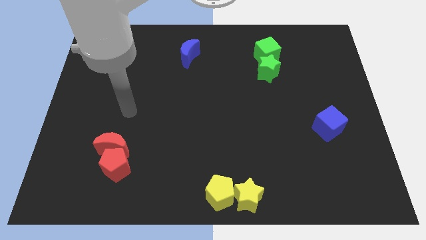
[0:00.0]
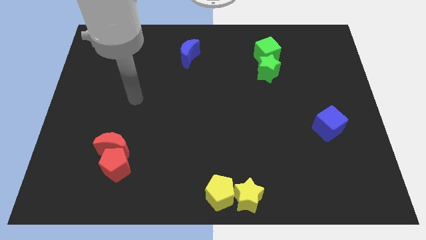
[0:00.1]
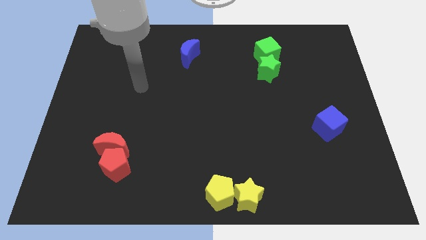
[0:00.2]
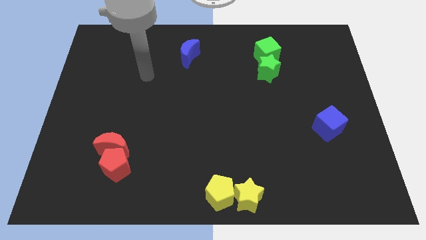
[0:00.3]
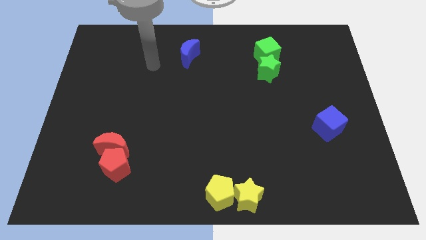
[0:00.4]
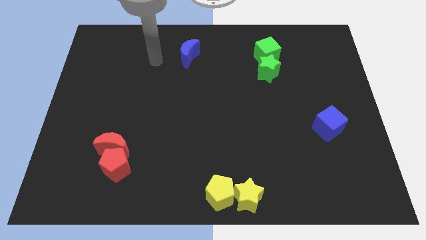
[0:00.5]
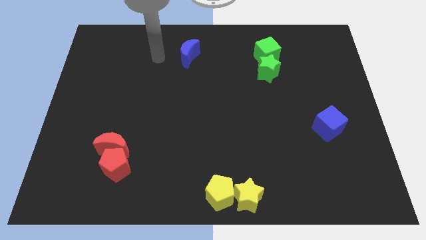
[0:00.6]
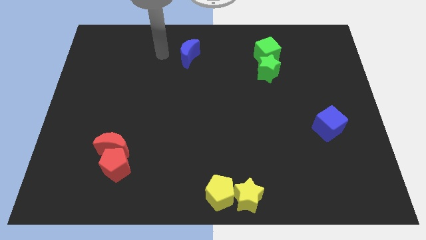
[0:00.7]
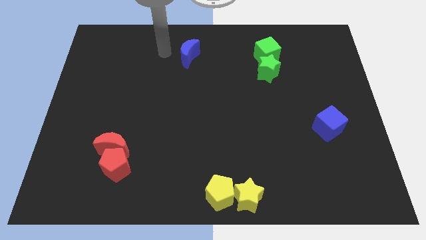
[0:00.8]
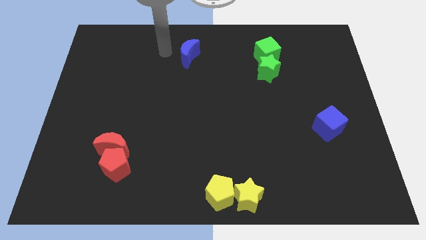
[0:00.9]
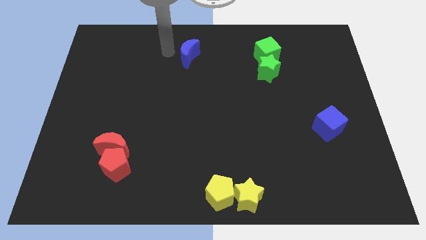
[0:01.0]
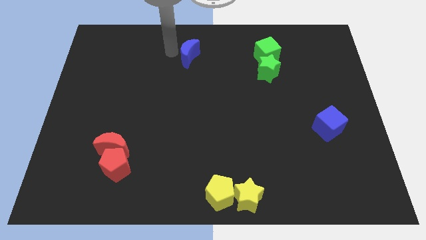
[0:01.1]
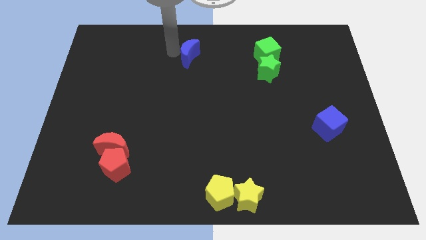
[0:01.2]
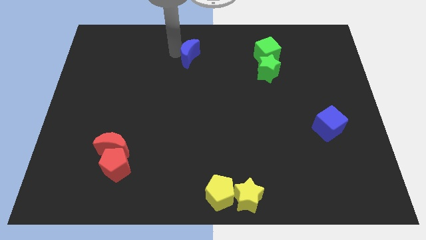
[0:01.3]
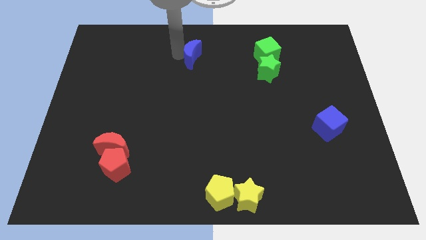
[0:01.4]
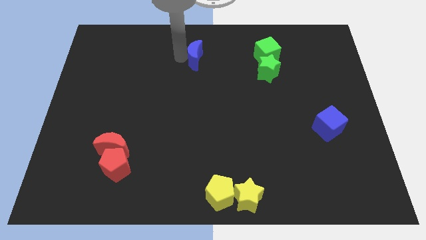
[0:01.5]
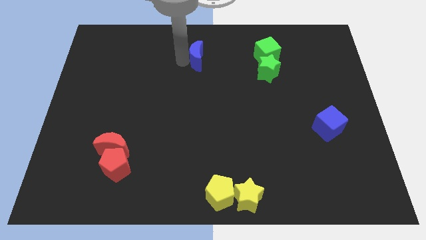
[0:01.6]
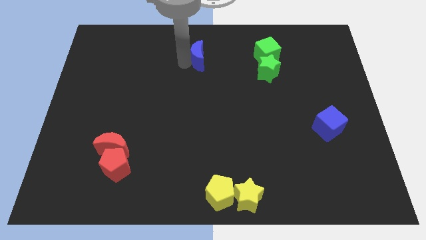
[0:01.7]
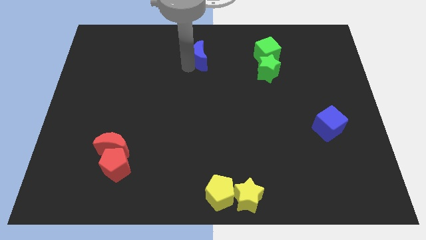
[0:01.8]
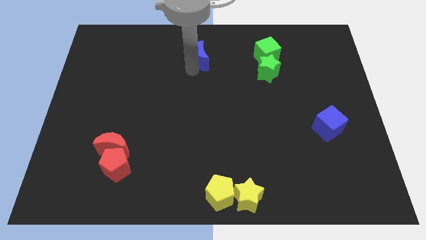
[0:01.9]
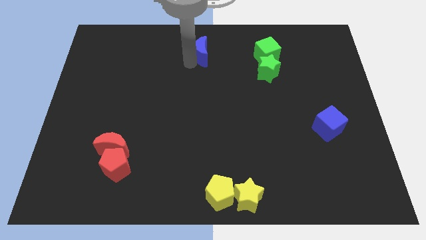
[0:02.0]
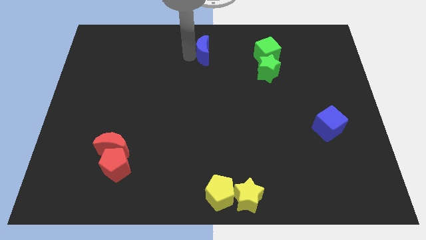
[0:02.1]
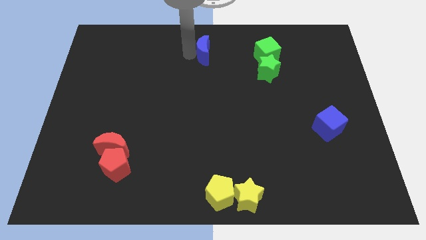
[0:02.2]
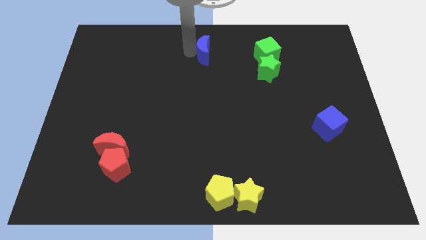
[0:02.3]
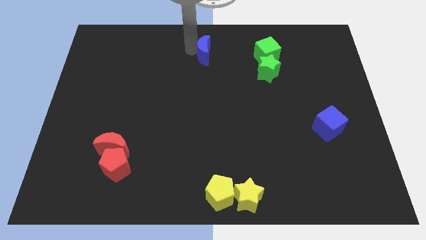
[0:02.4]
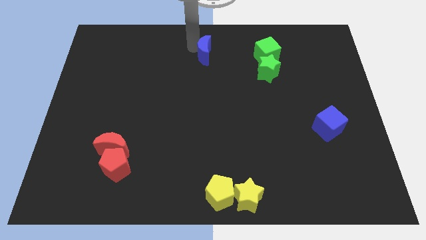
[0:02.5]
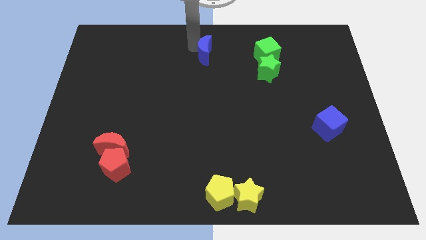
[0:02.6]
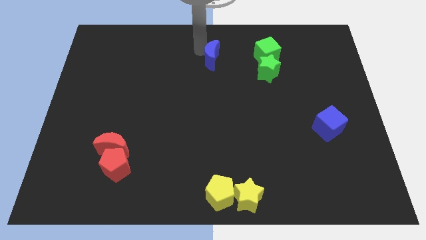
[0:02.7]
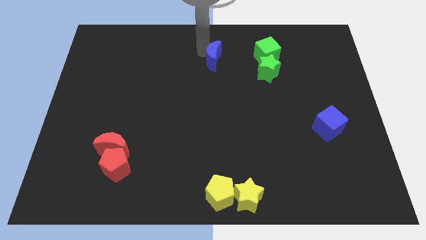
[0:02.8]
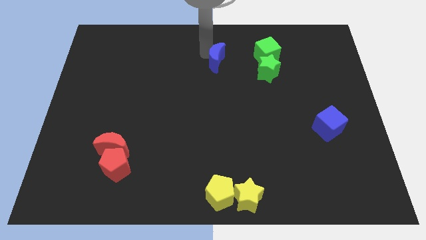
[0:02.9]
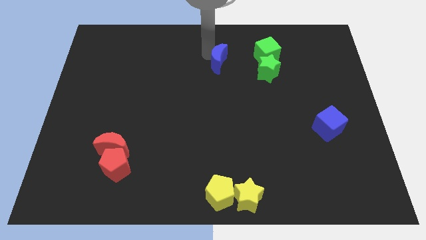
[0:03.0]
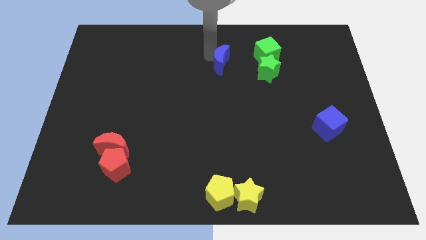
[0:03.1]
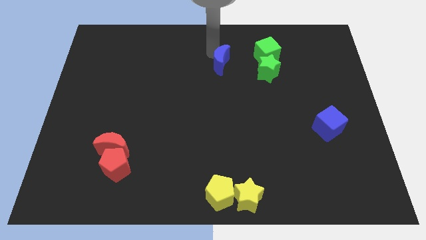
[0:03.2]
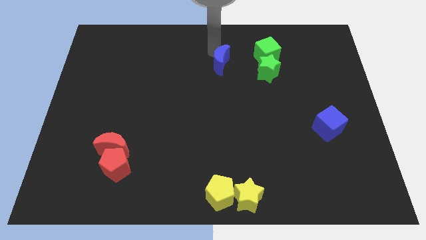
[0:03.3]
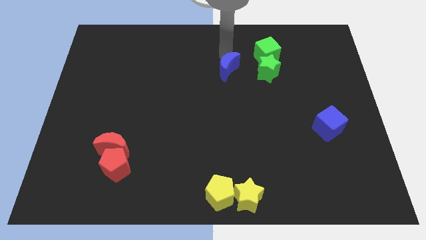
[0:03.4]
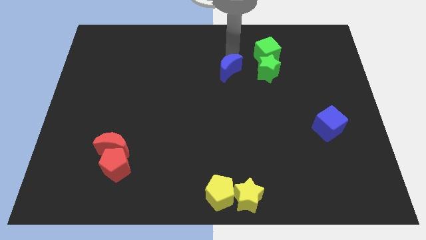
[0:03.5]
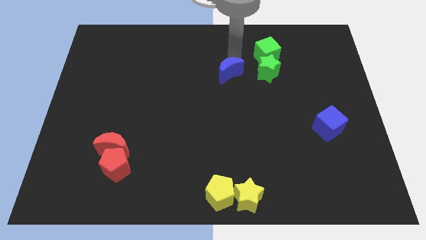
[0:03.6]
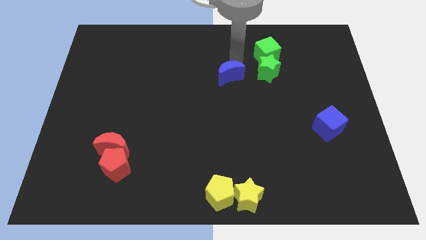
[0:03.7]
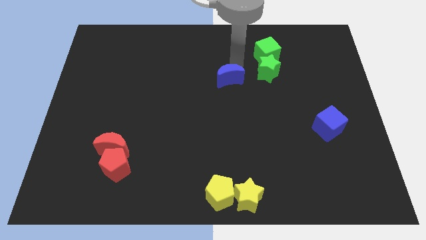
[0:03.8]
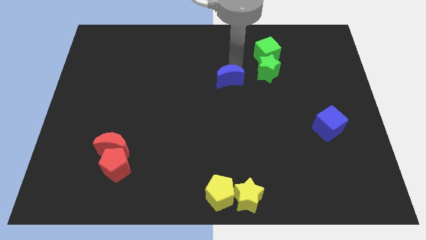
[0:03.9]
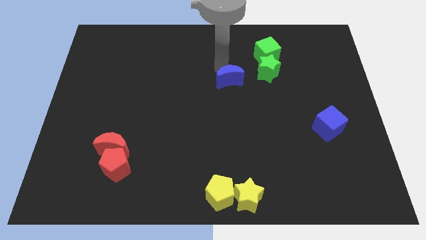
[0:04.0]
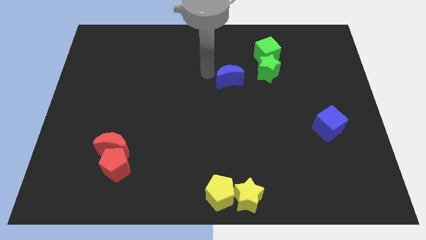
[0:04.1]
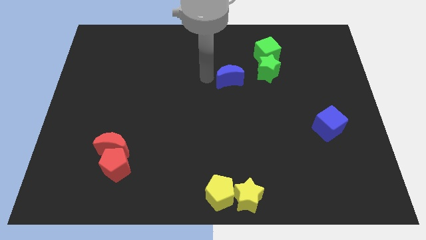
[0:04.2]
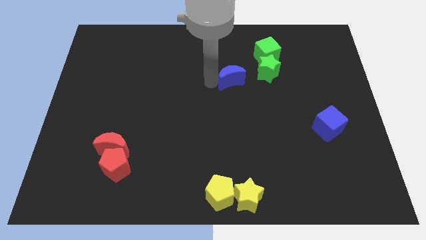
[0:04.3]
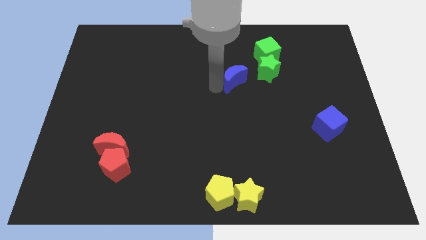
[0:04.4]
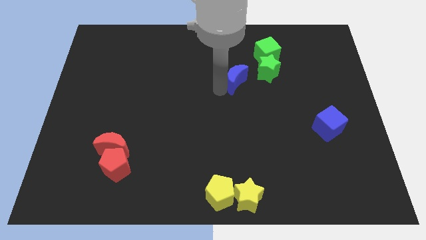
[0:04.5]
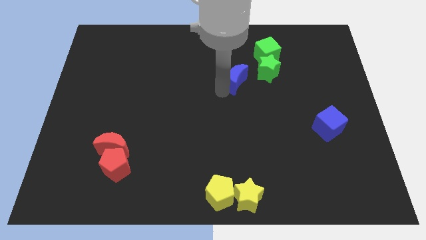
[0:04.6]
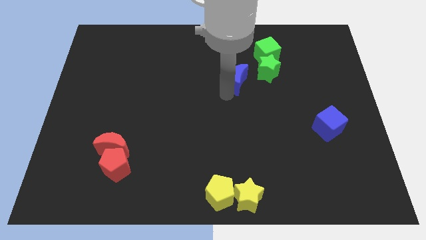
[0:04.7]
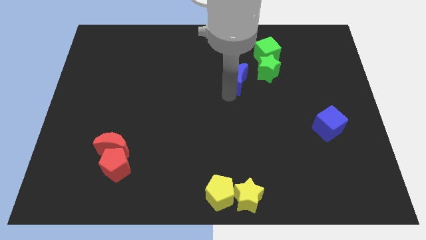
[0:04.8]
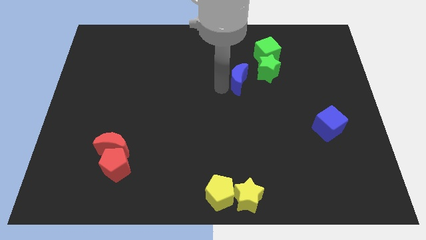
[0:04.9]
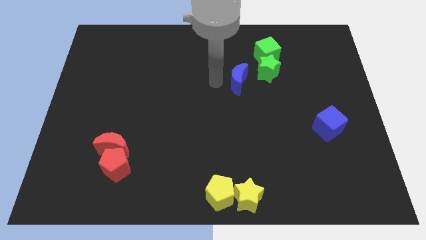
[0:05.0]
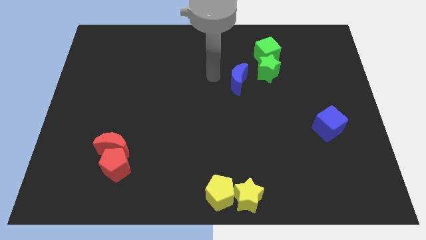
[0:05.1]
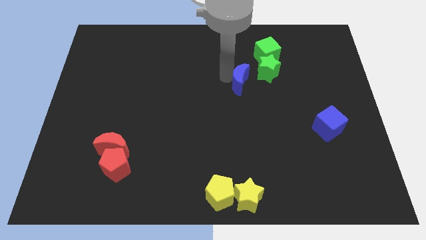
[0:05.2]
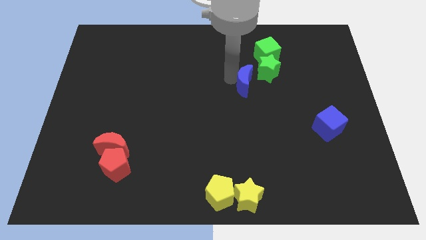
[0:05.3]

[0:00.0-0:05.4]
place the blue crescent to the top of the yellow star

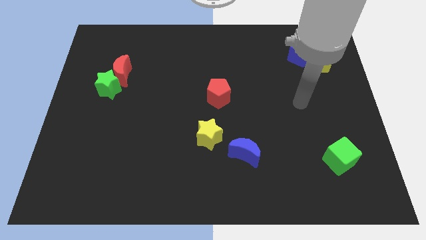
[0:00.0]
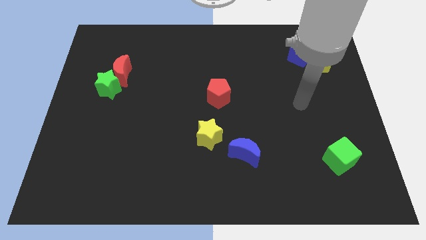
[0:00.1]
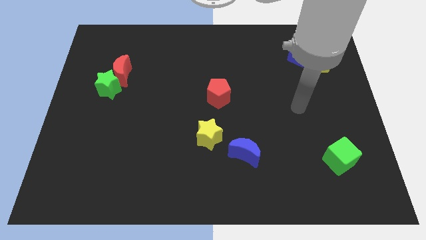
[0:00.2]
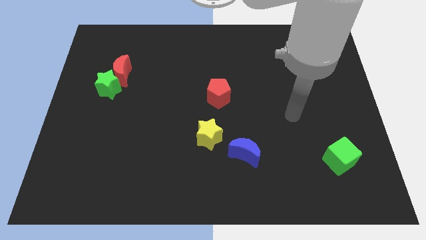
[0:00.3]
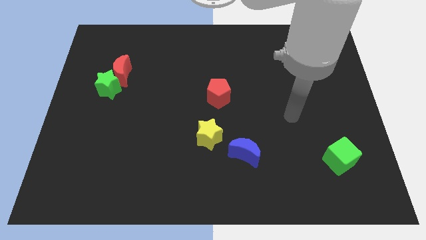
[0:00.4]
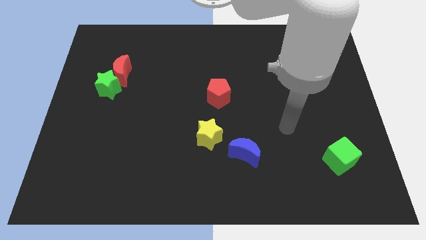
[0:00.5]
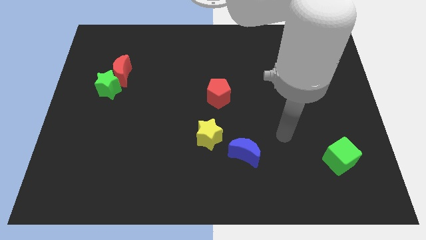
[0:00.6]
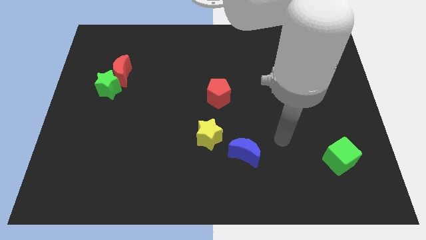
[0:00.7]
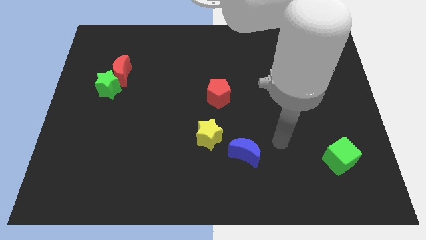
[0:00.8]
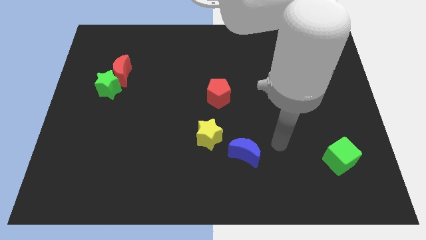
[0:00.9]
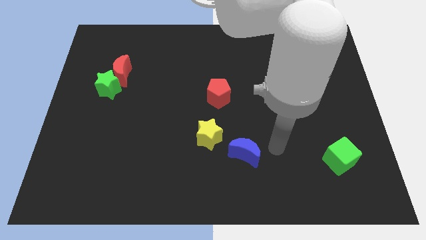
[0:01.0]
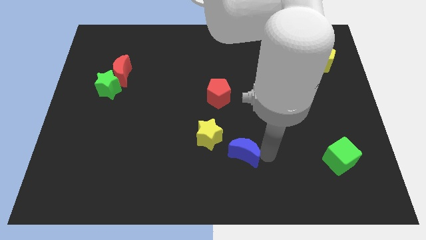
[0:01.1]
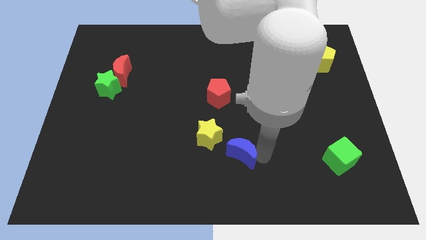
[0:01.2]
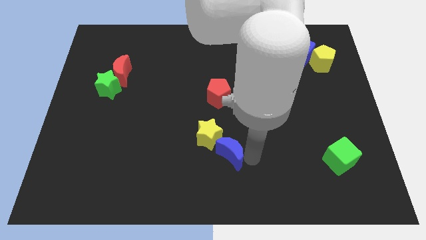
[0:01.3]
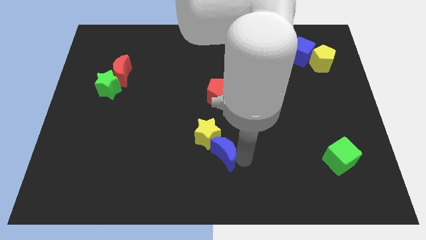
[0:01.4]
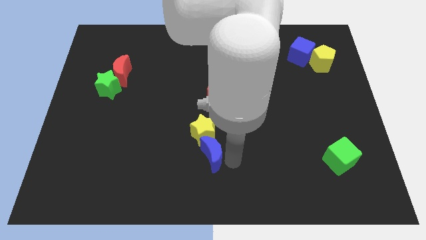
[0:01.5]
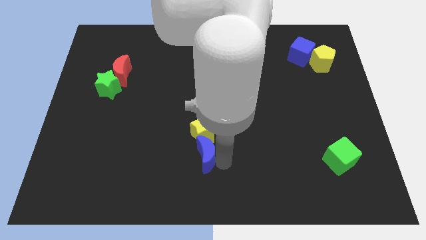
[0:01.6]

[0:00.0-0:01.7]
place blue moon below the yellow star

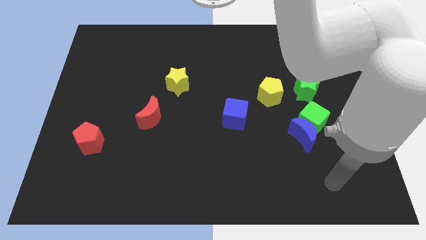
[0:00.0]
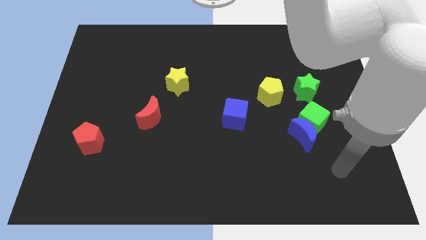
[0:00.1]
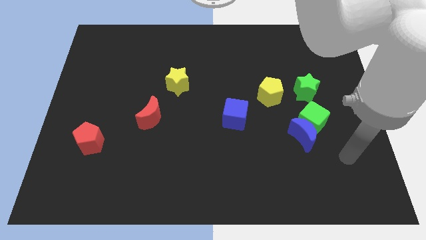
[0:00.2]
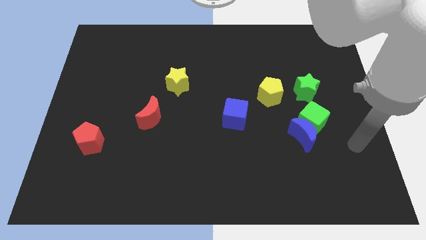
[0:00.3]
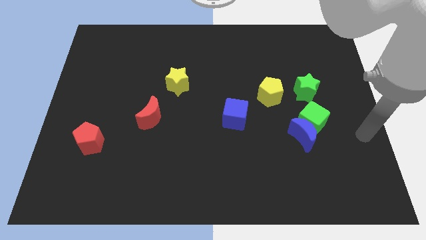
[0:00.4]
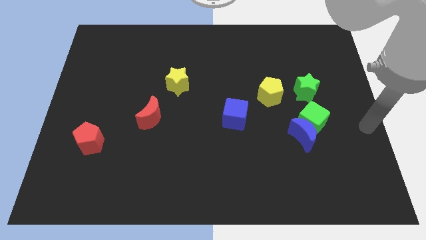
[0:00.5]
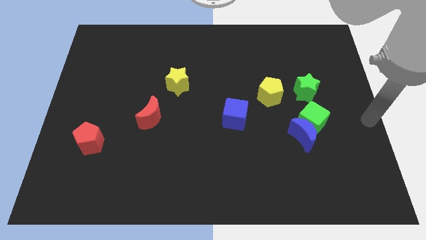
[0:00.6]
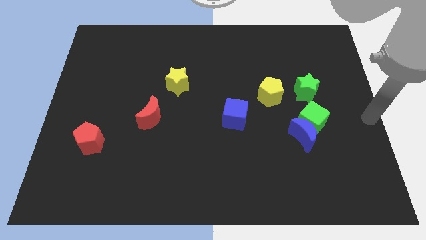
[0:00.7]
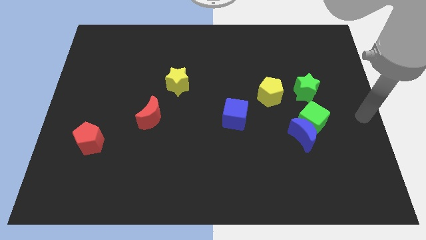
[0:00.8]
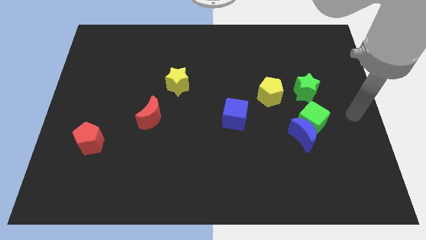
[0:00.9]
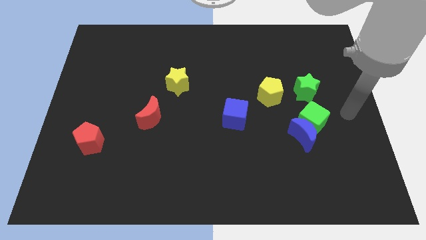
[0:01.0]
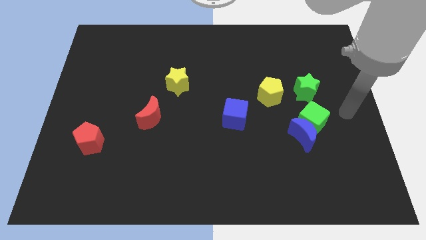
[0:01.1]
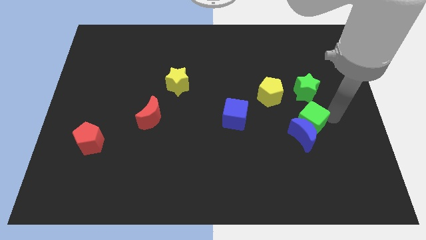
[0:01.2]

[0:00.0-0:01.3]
move your hand to the right of the green cube

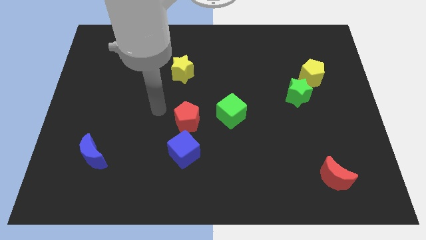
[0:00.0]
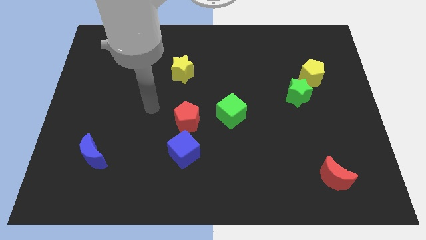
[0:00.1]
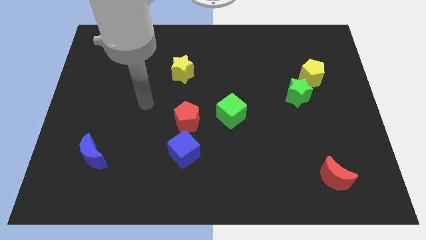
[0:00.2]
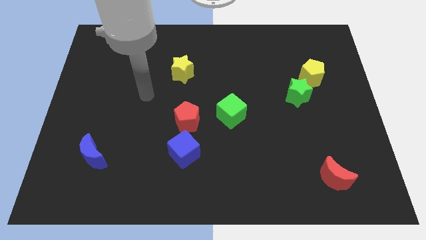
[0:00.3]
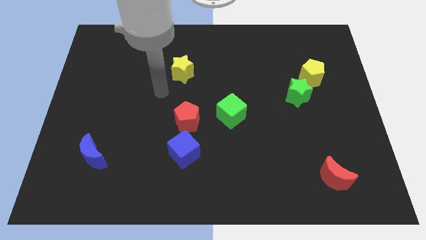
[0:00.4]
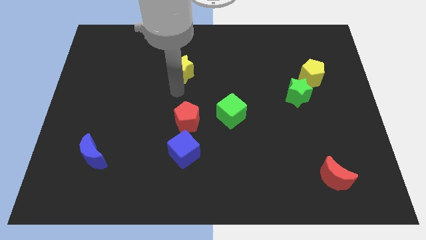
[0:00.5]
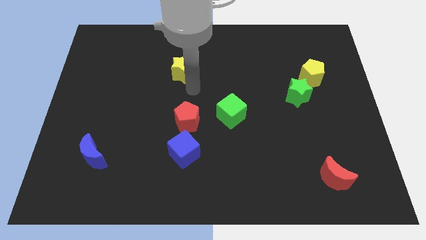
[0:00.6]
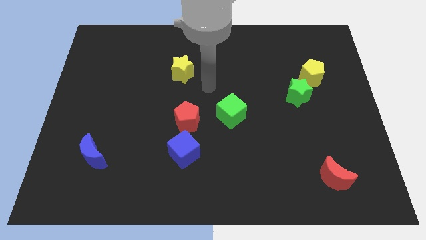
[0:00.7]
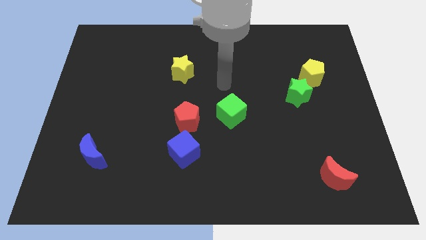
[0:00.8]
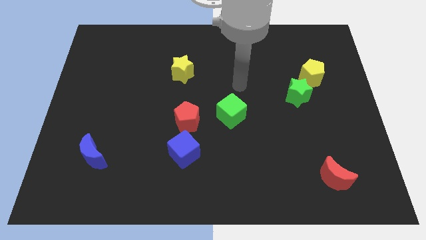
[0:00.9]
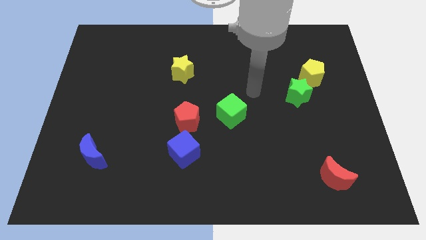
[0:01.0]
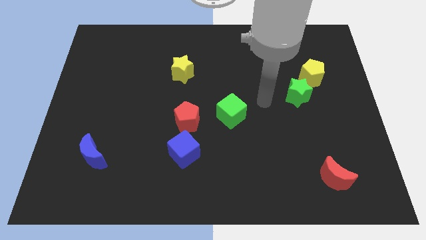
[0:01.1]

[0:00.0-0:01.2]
place the arm in between the green blocks
